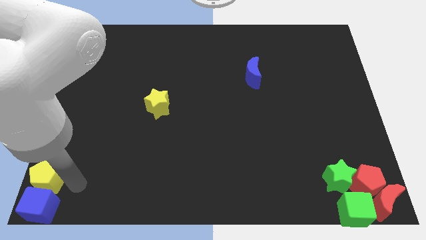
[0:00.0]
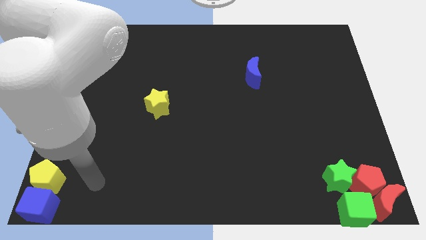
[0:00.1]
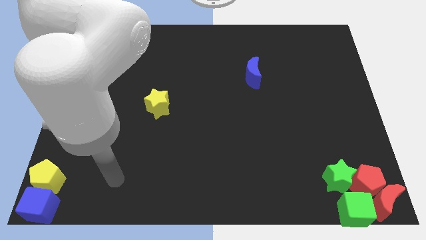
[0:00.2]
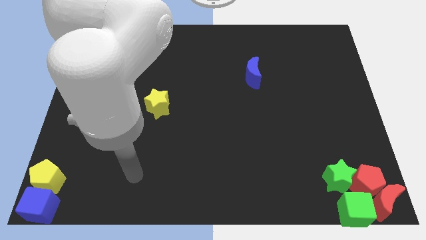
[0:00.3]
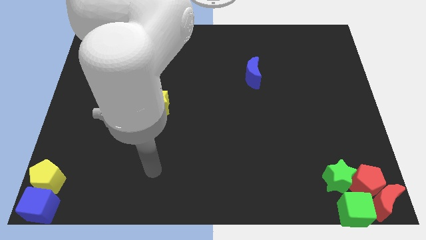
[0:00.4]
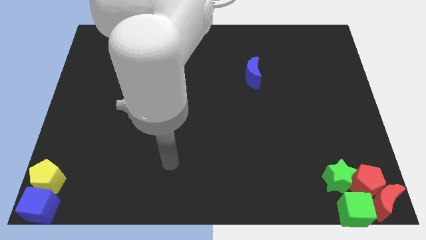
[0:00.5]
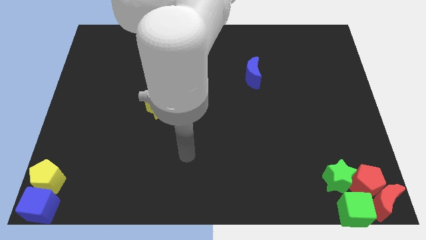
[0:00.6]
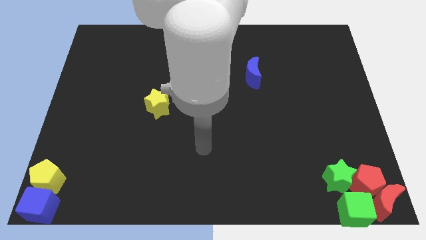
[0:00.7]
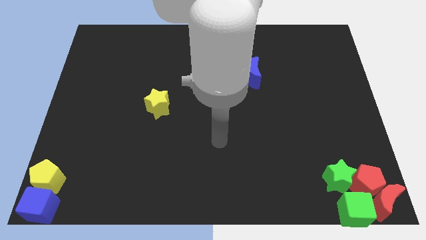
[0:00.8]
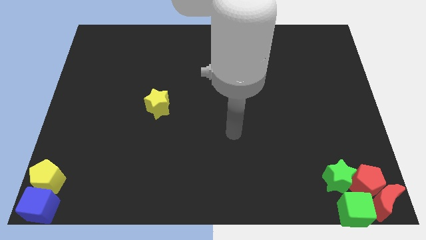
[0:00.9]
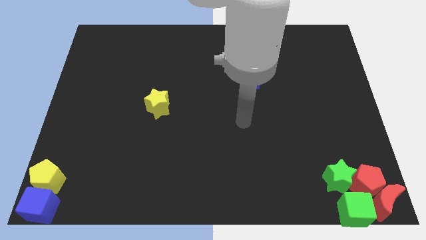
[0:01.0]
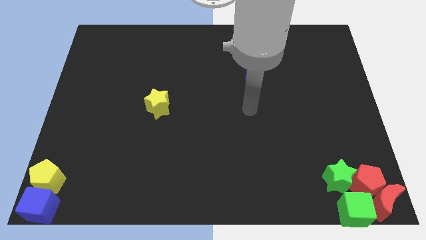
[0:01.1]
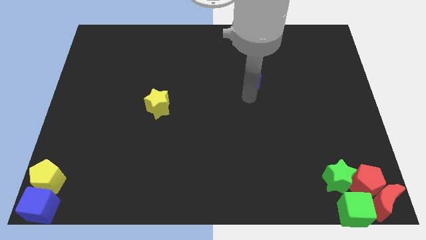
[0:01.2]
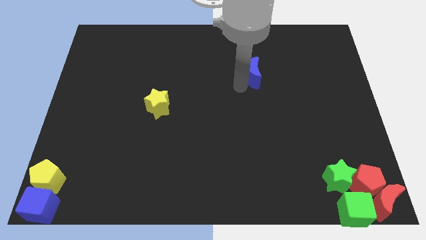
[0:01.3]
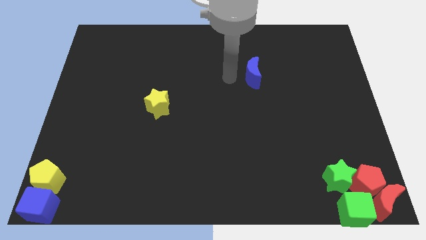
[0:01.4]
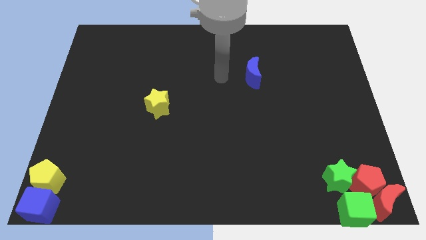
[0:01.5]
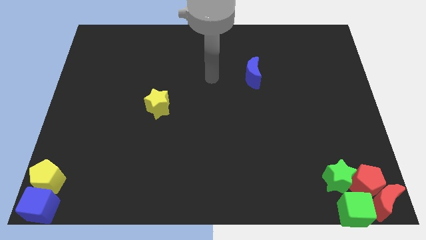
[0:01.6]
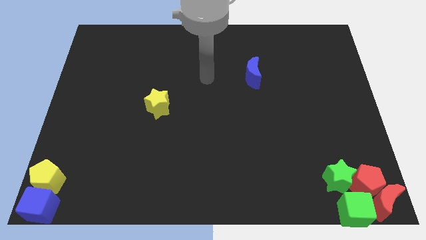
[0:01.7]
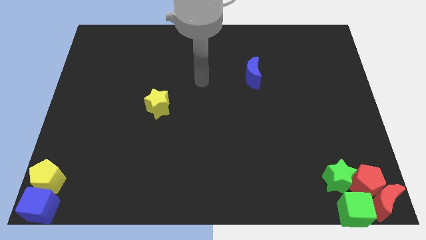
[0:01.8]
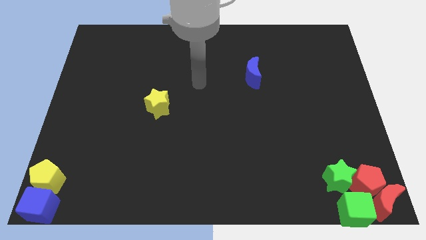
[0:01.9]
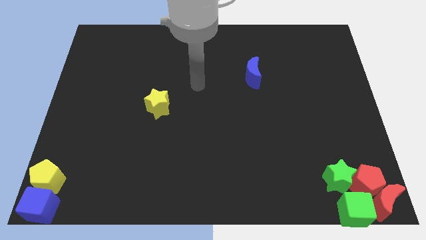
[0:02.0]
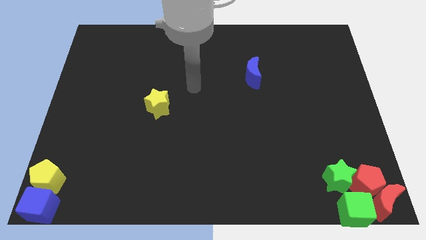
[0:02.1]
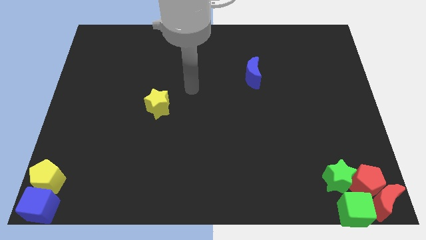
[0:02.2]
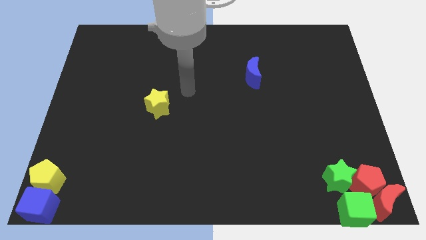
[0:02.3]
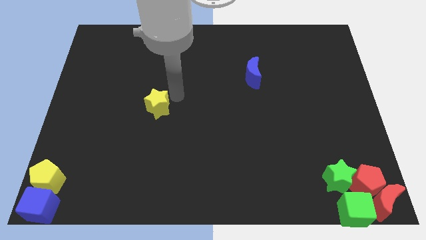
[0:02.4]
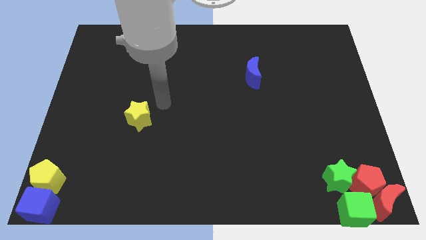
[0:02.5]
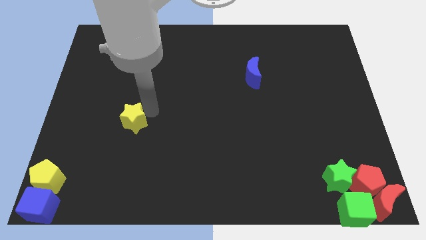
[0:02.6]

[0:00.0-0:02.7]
move the yellow star towards yellow pentagon

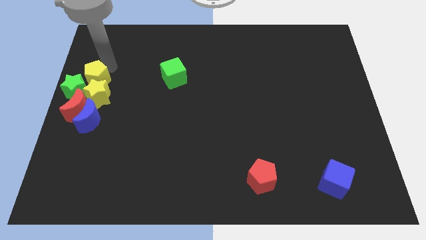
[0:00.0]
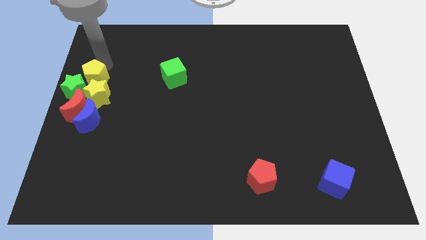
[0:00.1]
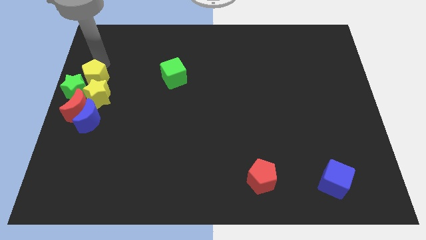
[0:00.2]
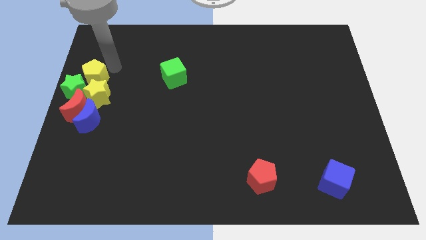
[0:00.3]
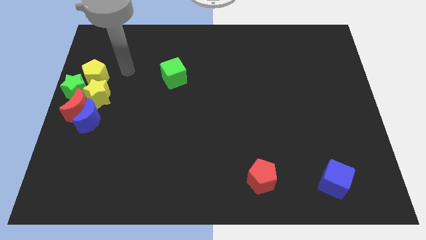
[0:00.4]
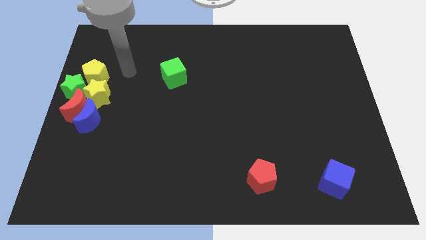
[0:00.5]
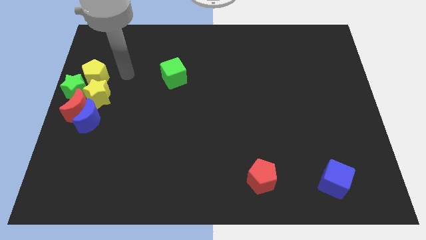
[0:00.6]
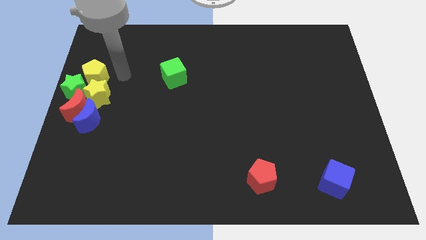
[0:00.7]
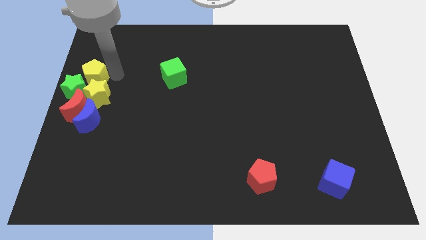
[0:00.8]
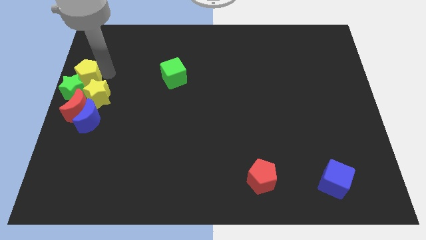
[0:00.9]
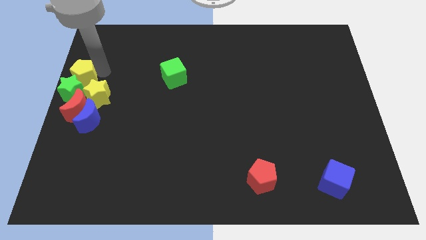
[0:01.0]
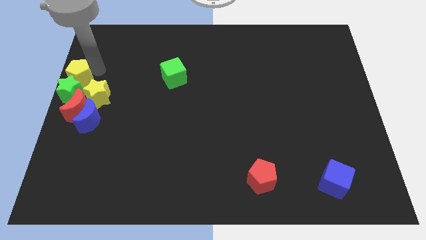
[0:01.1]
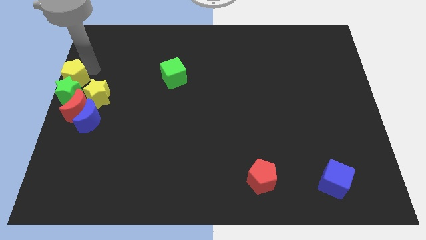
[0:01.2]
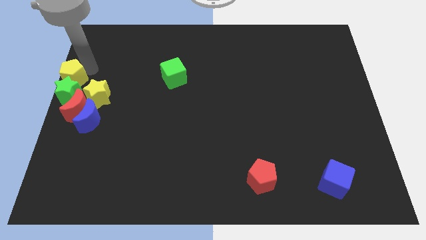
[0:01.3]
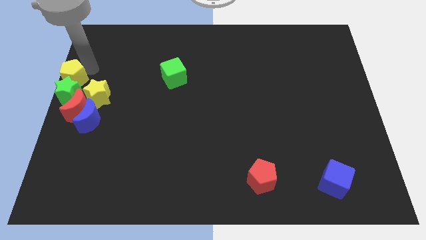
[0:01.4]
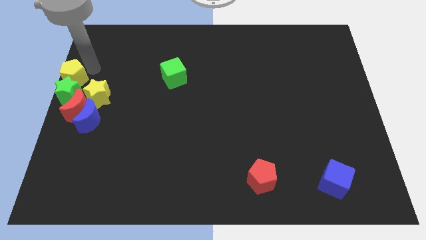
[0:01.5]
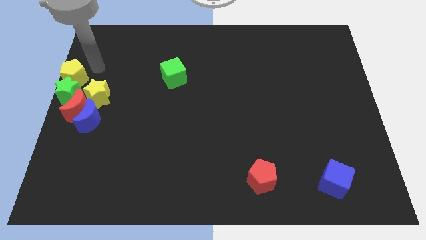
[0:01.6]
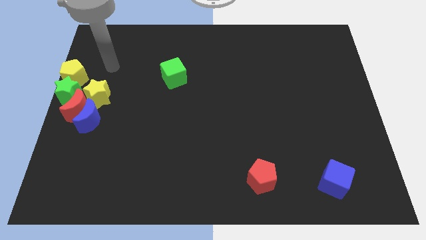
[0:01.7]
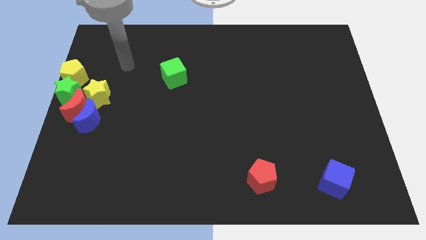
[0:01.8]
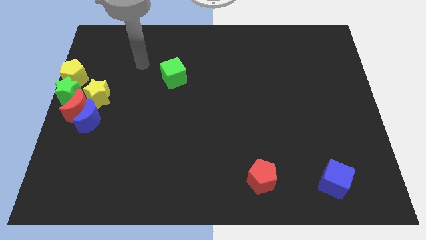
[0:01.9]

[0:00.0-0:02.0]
push the yellow pentagon into the green star

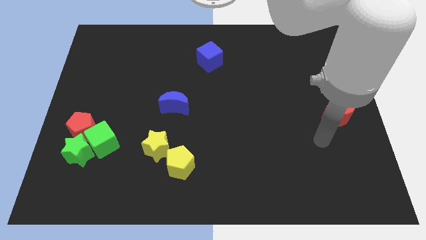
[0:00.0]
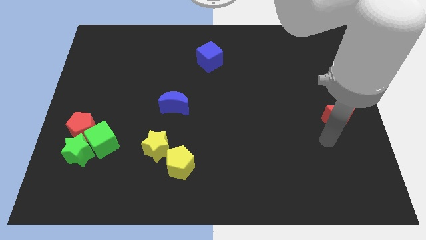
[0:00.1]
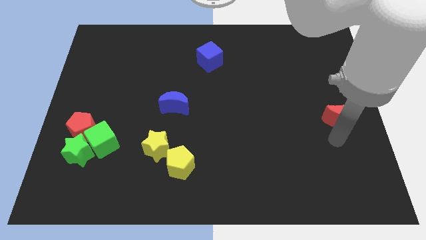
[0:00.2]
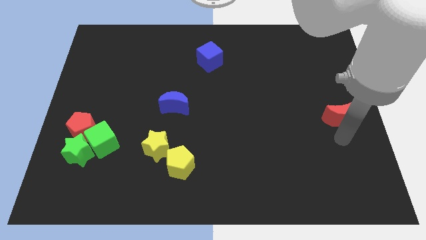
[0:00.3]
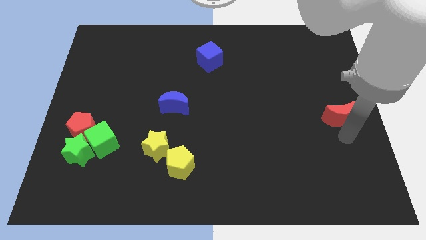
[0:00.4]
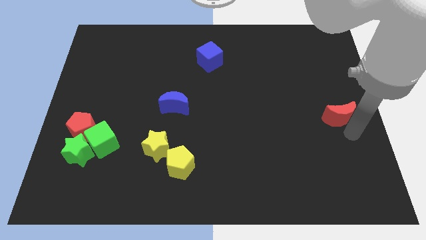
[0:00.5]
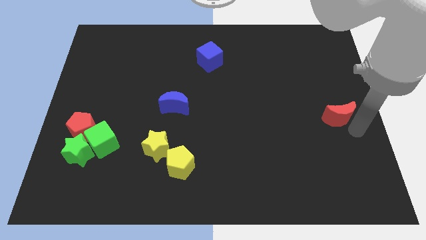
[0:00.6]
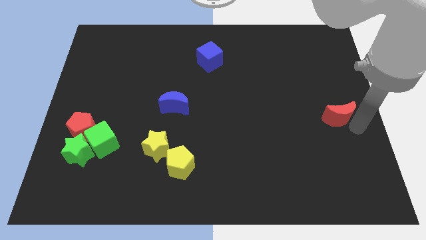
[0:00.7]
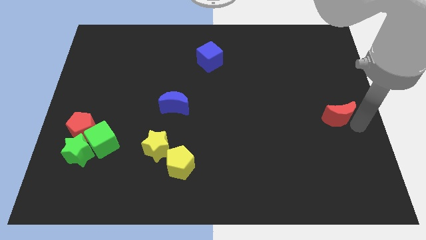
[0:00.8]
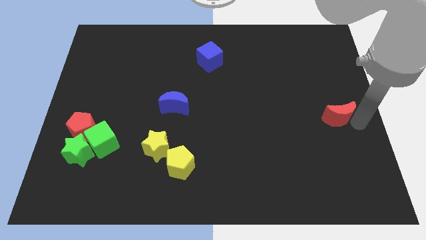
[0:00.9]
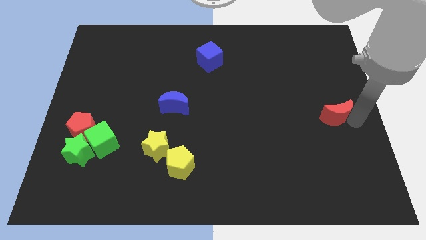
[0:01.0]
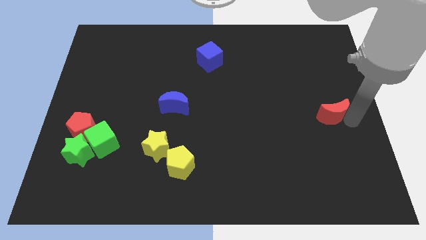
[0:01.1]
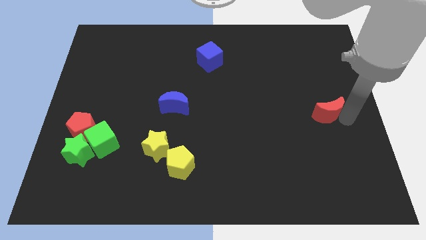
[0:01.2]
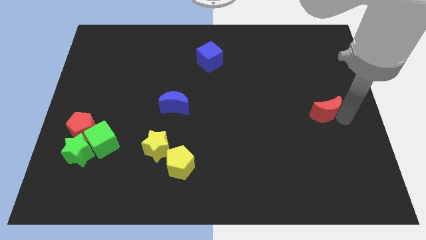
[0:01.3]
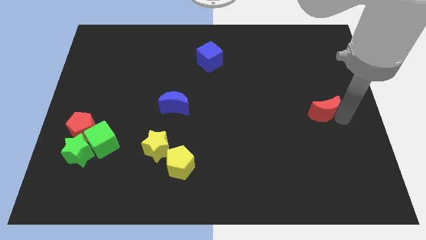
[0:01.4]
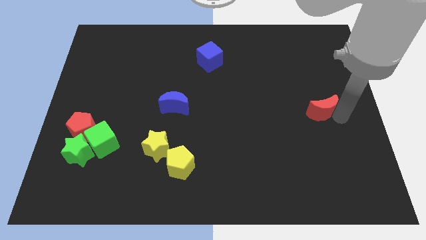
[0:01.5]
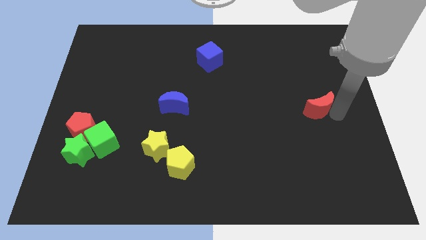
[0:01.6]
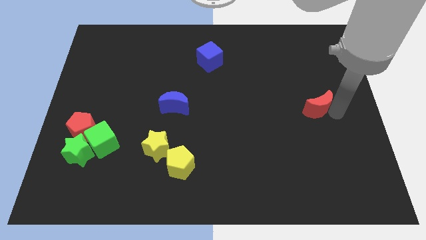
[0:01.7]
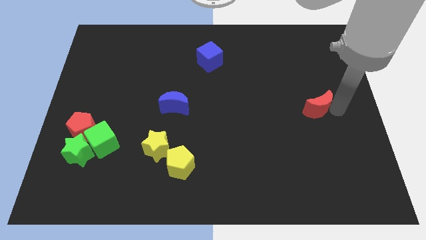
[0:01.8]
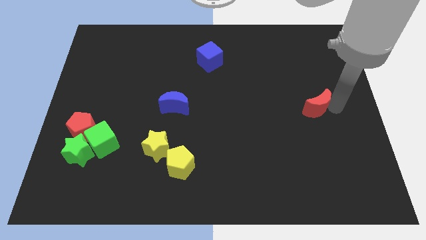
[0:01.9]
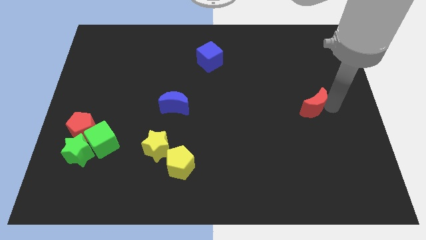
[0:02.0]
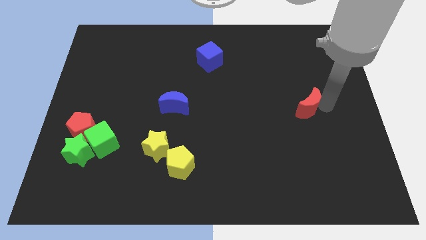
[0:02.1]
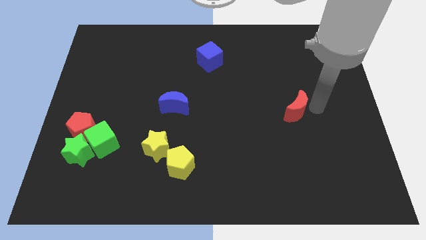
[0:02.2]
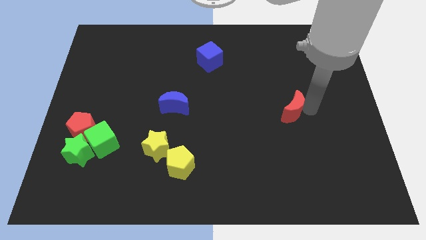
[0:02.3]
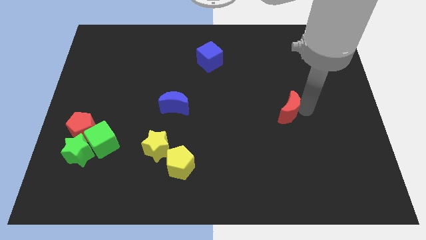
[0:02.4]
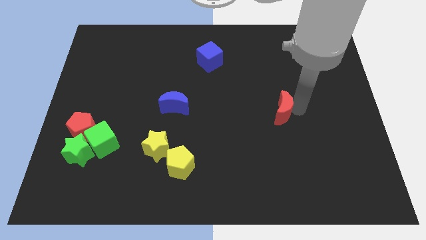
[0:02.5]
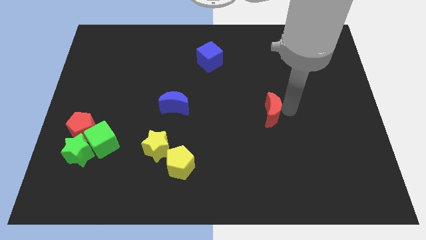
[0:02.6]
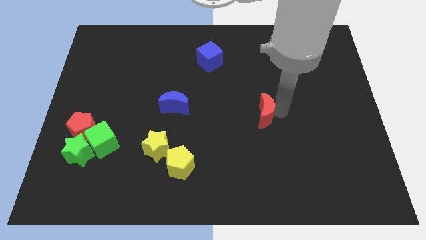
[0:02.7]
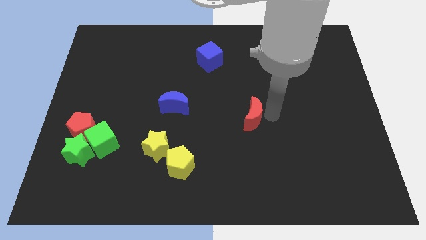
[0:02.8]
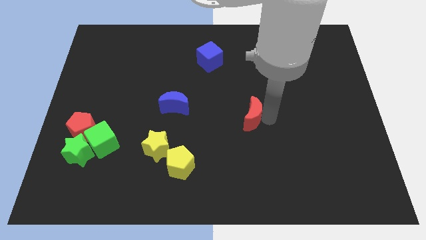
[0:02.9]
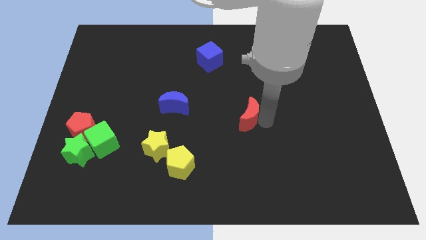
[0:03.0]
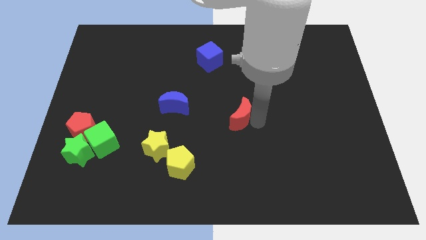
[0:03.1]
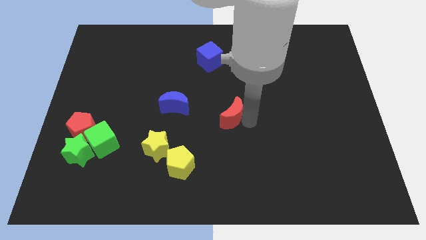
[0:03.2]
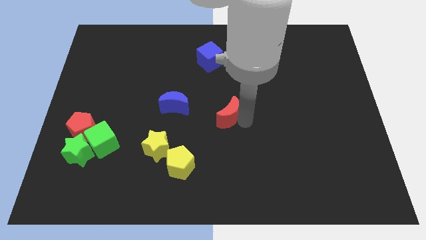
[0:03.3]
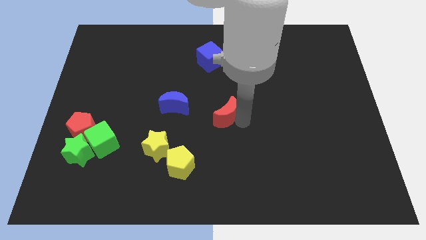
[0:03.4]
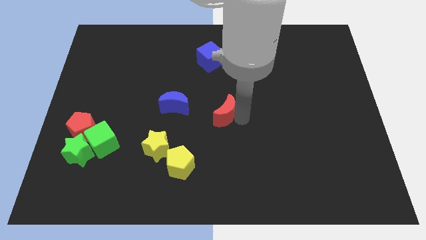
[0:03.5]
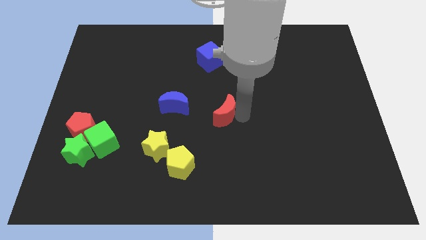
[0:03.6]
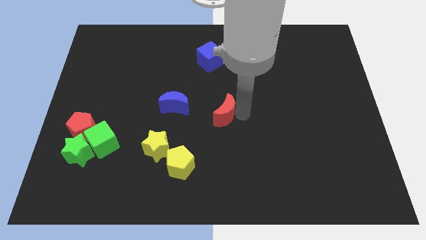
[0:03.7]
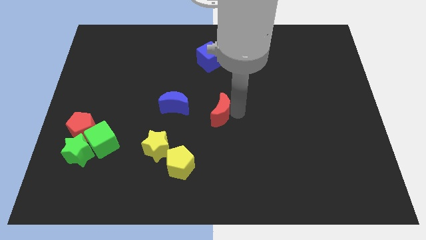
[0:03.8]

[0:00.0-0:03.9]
push the red crescent to the center of the board

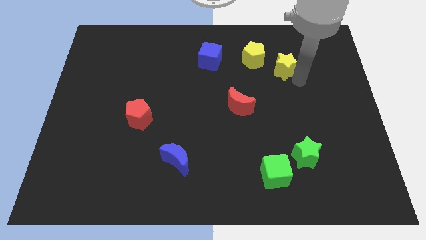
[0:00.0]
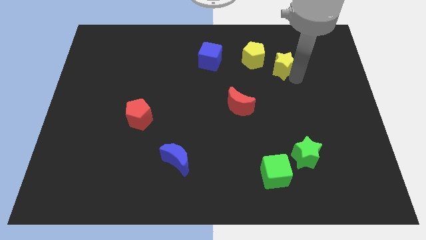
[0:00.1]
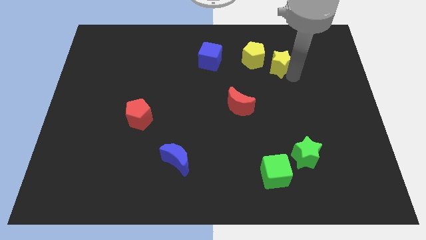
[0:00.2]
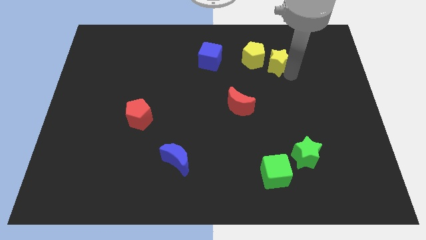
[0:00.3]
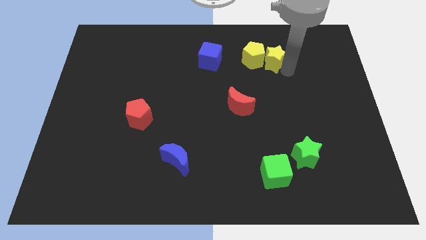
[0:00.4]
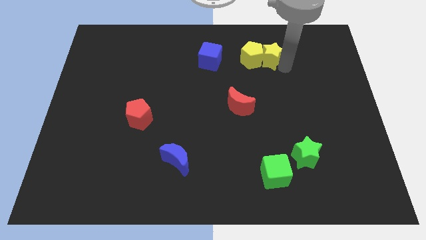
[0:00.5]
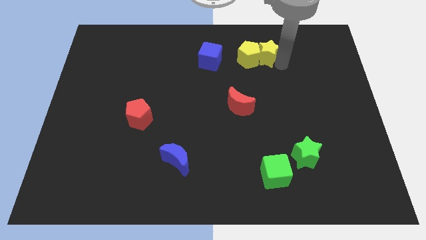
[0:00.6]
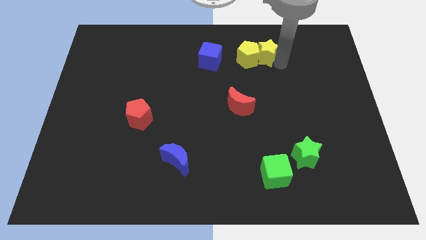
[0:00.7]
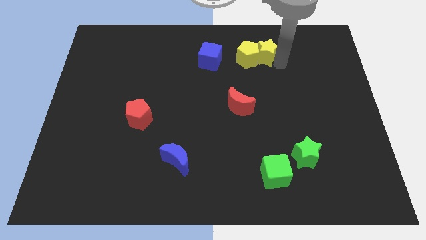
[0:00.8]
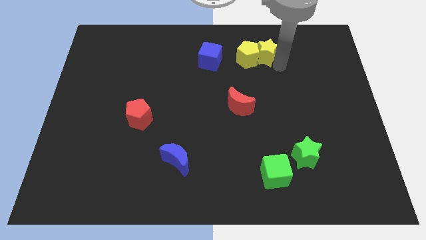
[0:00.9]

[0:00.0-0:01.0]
push the yellow star into the yellow pentagon
